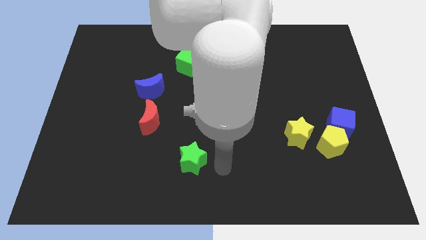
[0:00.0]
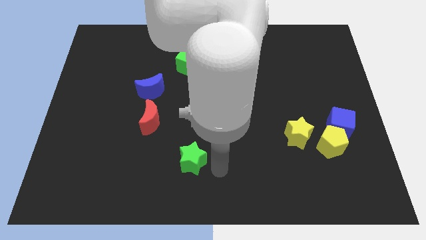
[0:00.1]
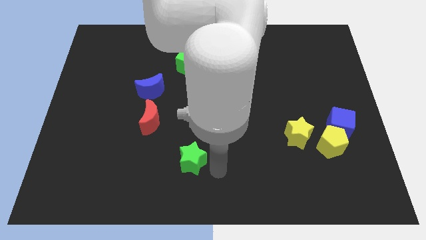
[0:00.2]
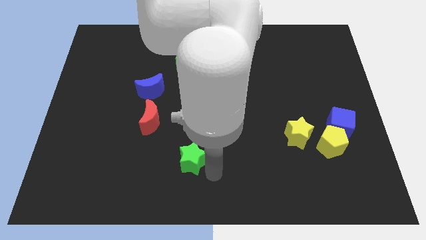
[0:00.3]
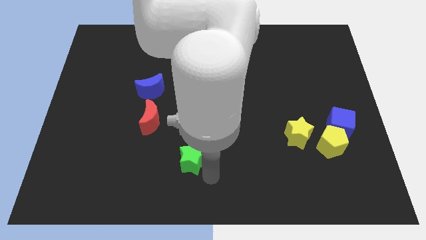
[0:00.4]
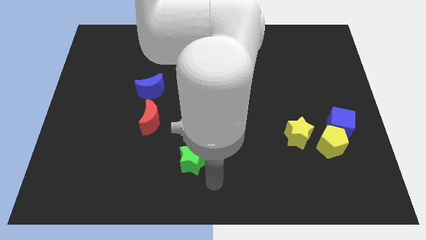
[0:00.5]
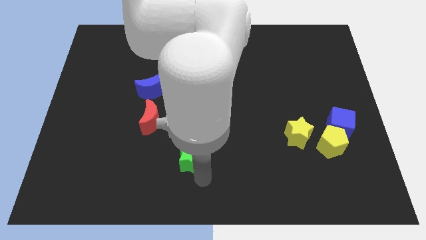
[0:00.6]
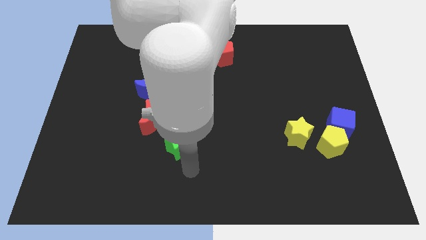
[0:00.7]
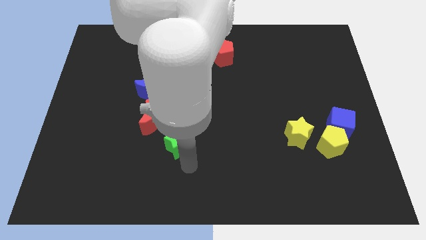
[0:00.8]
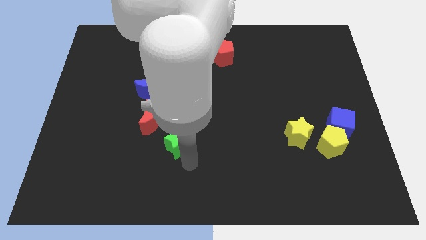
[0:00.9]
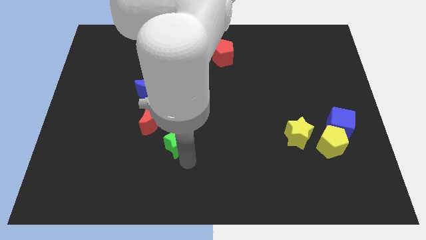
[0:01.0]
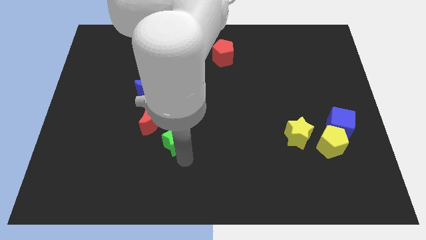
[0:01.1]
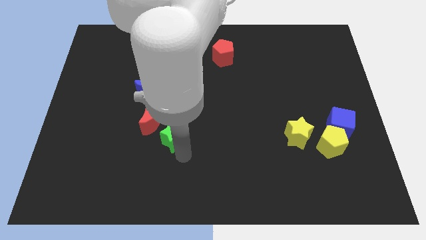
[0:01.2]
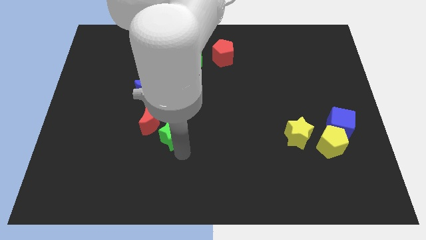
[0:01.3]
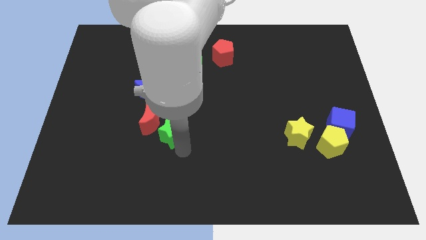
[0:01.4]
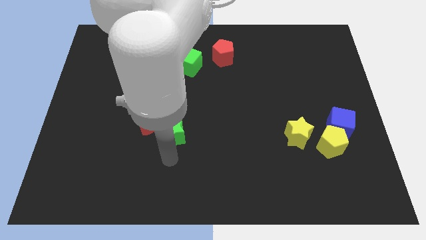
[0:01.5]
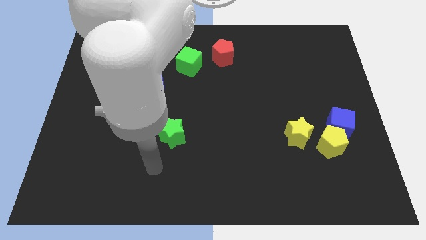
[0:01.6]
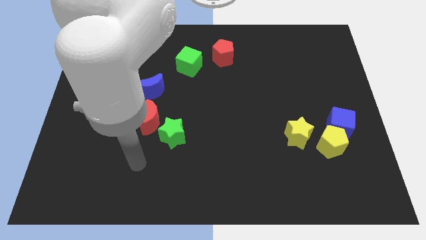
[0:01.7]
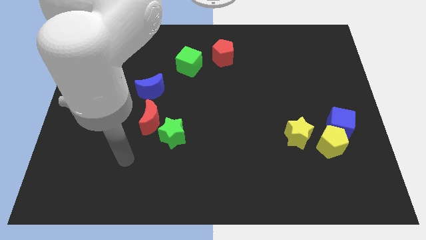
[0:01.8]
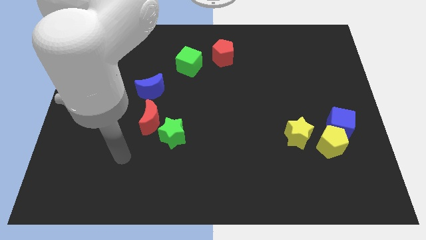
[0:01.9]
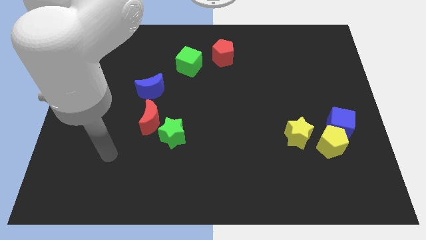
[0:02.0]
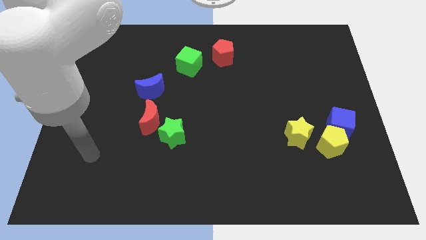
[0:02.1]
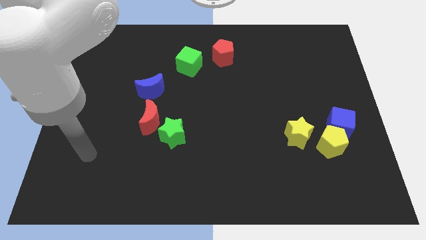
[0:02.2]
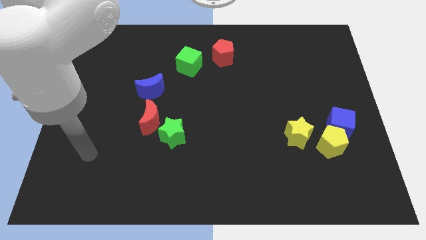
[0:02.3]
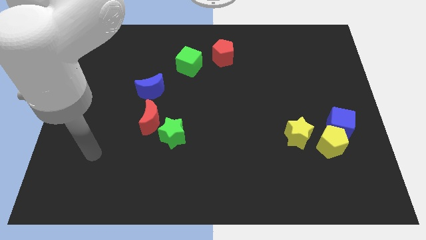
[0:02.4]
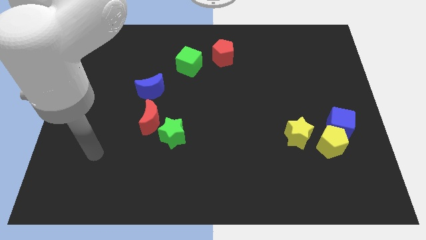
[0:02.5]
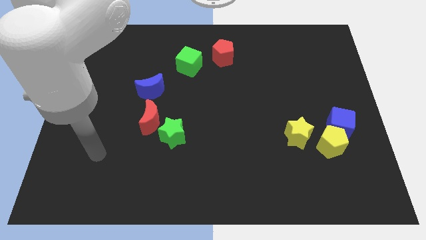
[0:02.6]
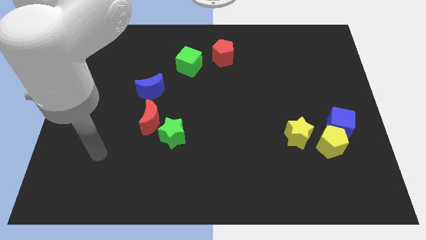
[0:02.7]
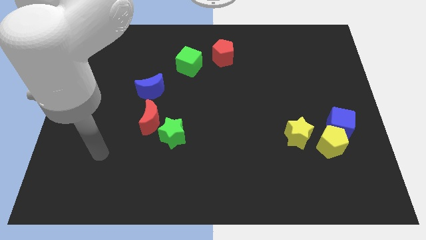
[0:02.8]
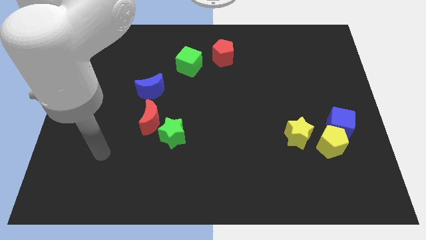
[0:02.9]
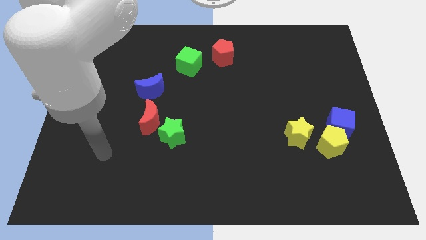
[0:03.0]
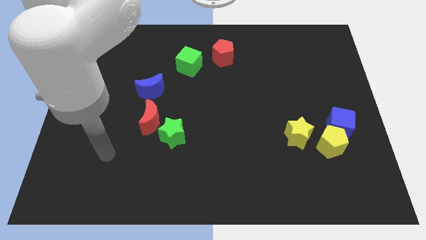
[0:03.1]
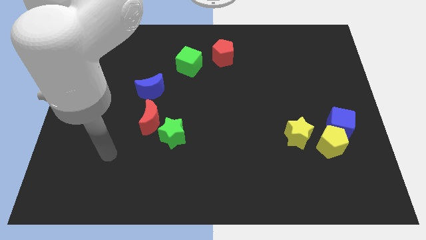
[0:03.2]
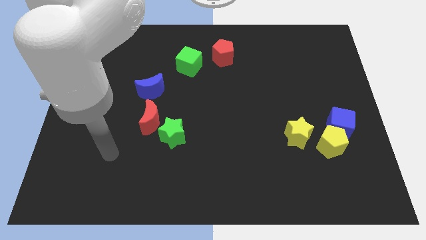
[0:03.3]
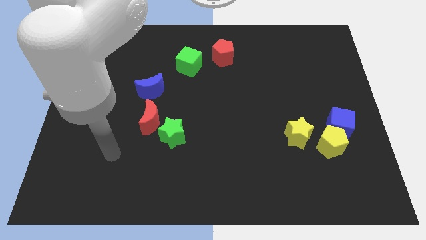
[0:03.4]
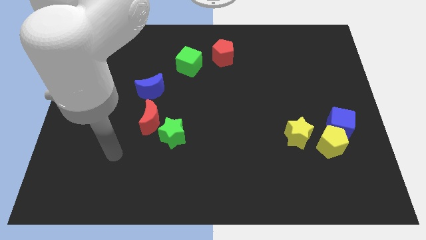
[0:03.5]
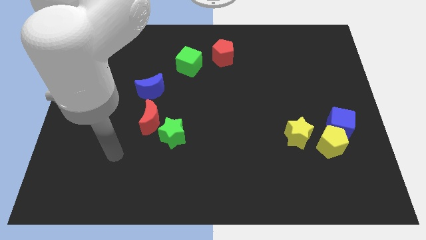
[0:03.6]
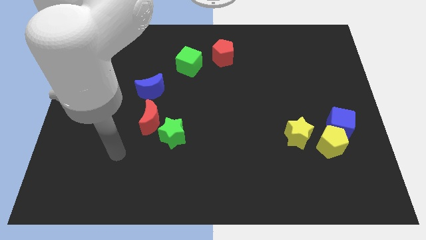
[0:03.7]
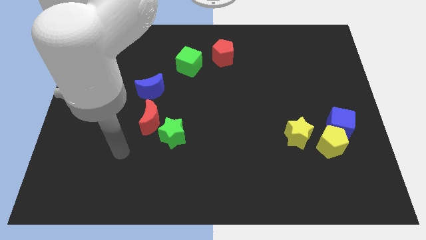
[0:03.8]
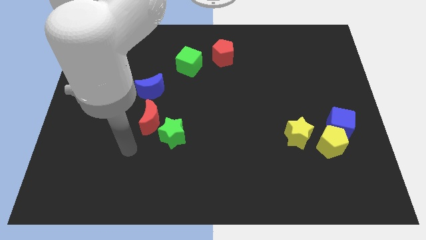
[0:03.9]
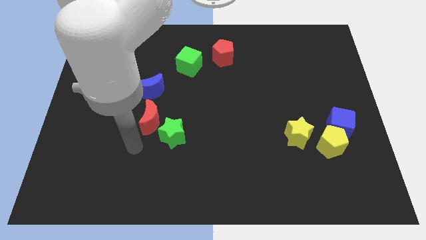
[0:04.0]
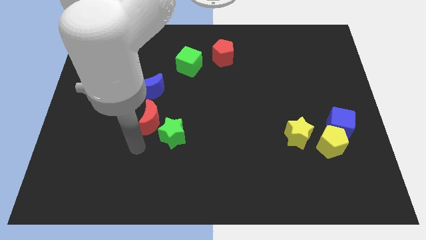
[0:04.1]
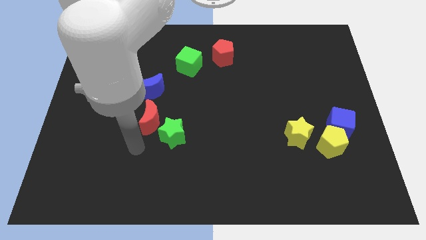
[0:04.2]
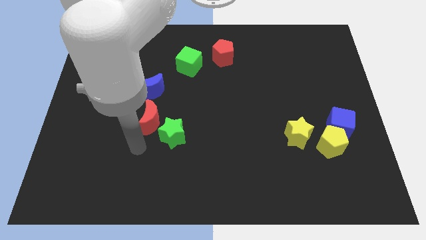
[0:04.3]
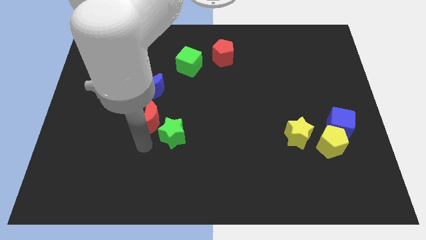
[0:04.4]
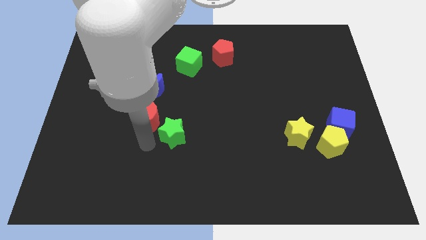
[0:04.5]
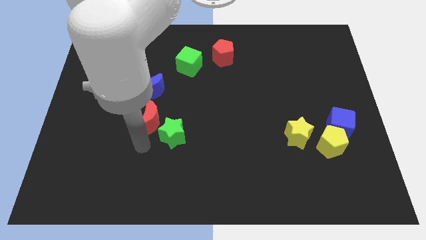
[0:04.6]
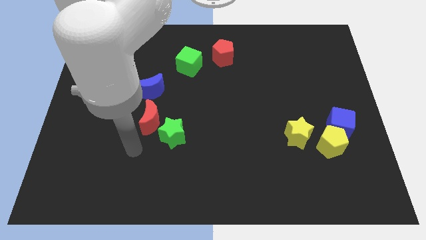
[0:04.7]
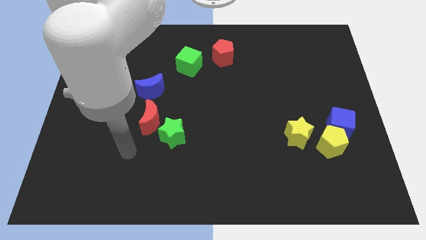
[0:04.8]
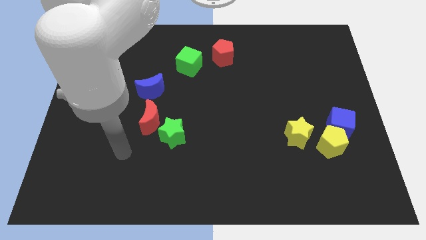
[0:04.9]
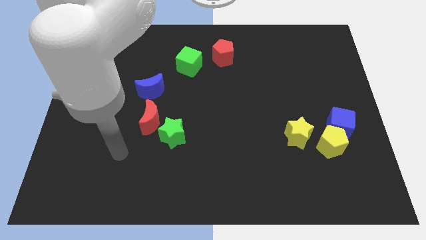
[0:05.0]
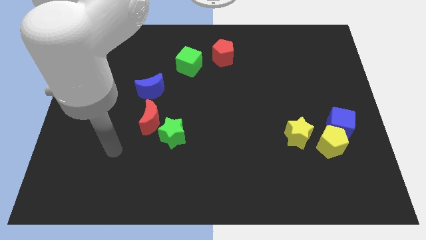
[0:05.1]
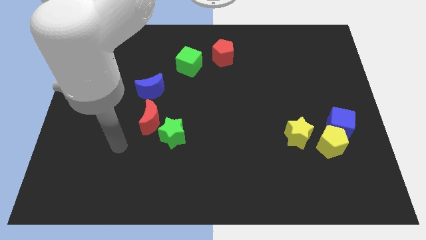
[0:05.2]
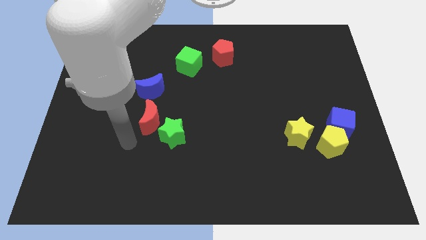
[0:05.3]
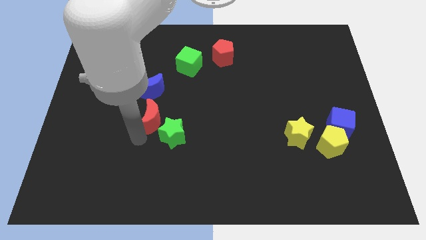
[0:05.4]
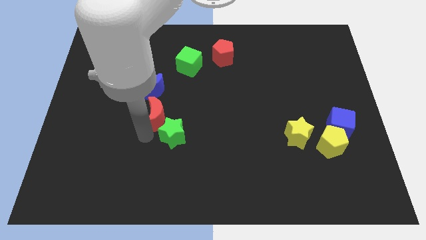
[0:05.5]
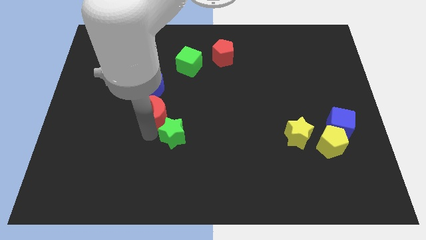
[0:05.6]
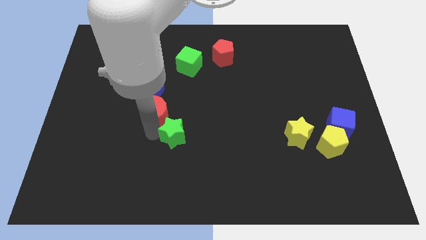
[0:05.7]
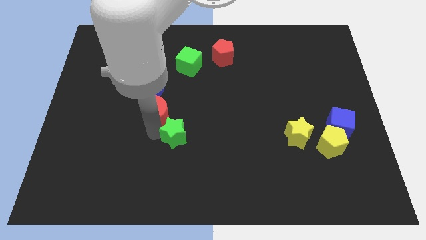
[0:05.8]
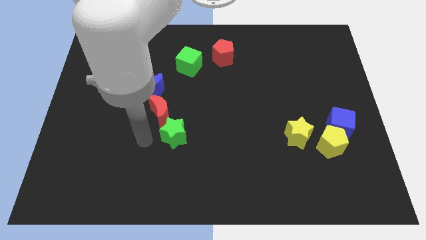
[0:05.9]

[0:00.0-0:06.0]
push the green star and red moon together to form a line

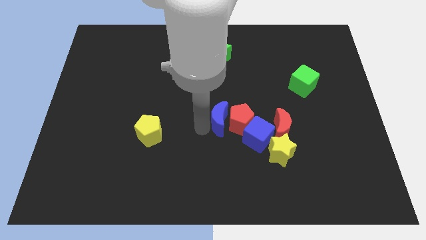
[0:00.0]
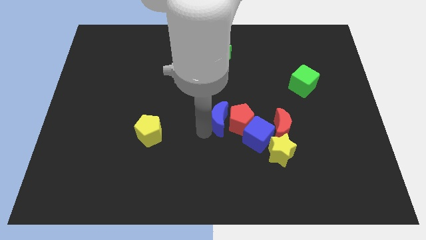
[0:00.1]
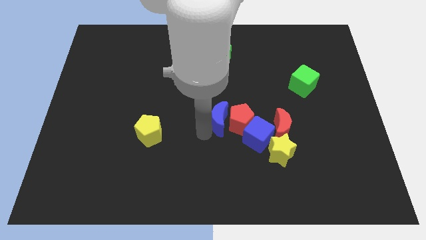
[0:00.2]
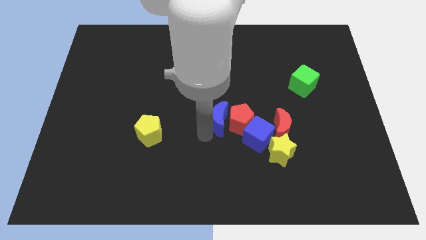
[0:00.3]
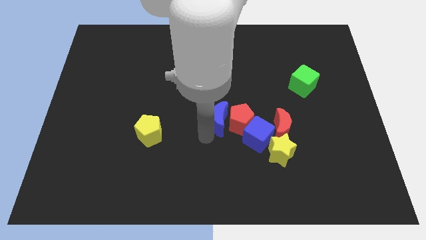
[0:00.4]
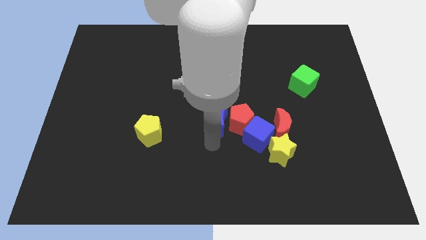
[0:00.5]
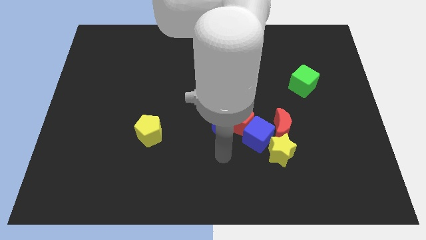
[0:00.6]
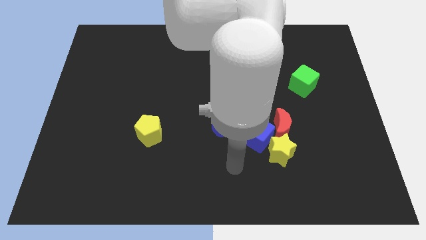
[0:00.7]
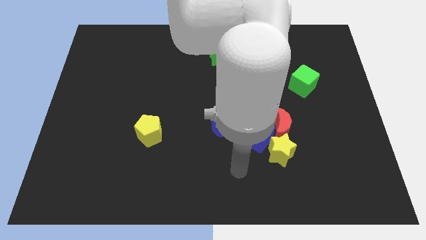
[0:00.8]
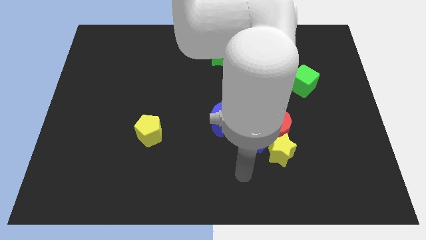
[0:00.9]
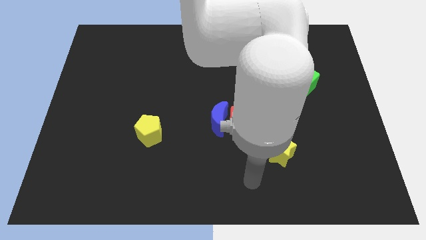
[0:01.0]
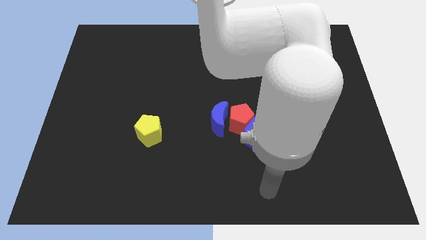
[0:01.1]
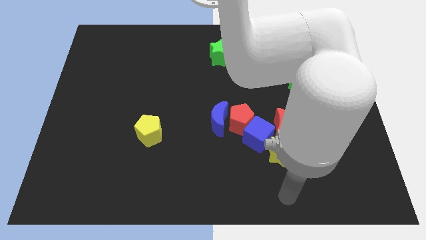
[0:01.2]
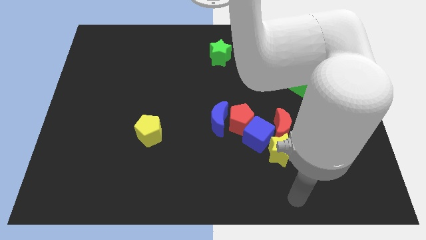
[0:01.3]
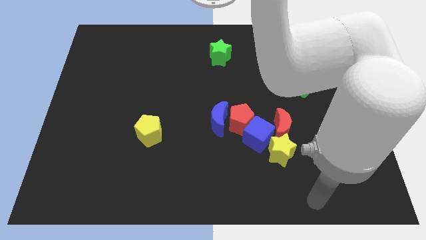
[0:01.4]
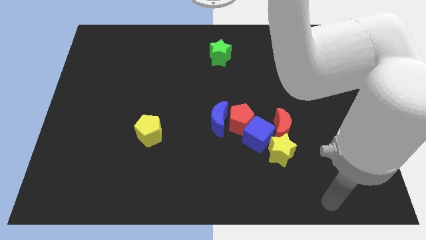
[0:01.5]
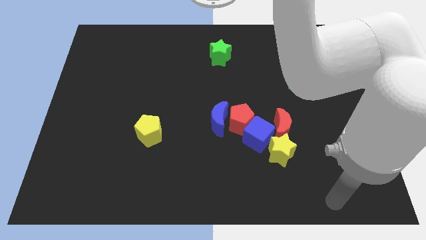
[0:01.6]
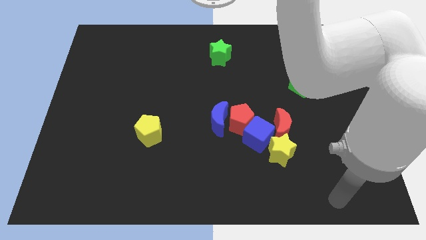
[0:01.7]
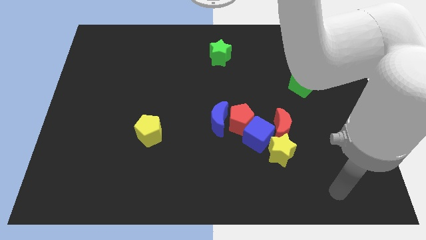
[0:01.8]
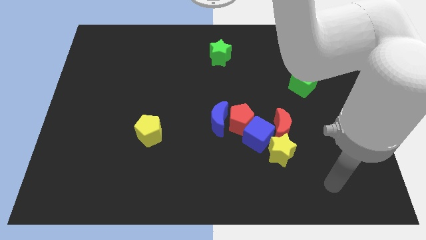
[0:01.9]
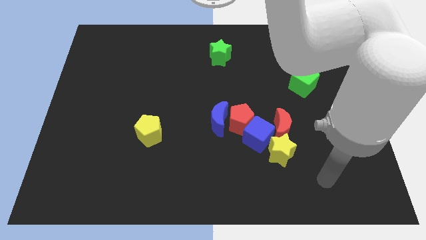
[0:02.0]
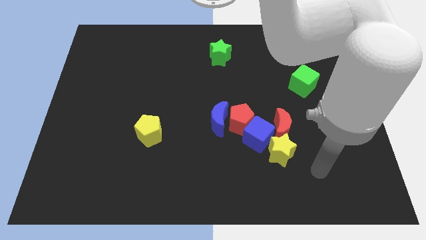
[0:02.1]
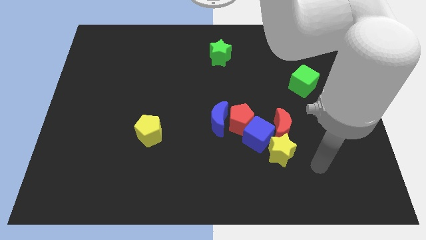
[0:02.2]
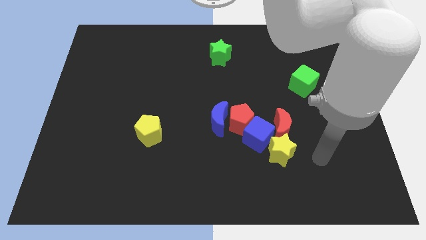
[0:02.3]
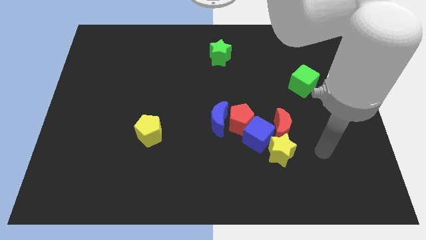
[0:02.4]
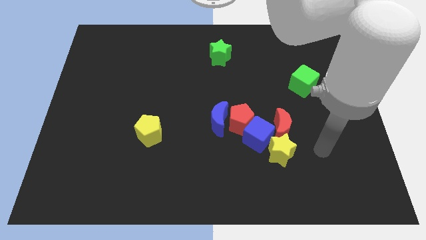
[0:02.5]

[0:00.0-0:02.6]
point your arm to the right of the yellow star

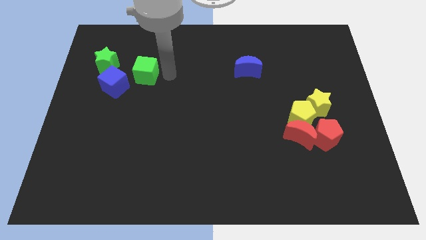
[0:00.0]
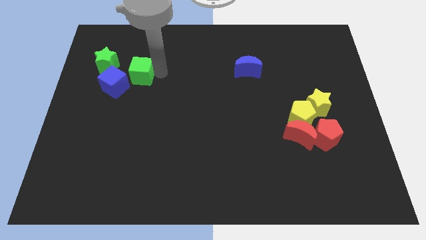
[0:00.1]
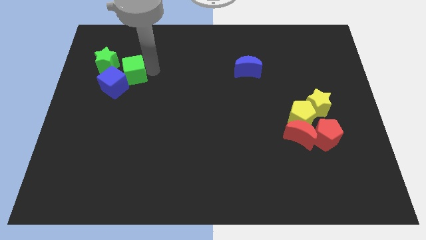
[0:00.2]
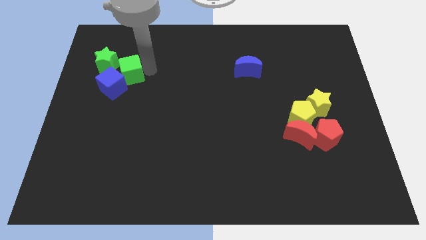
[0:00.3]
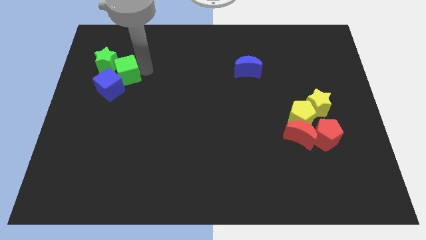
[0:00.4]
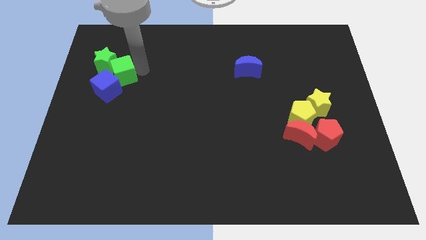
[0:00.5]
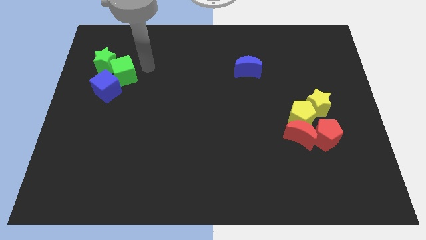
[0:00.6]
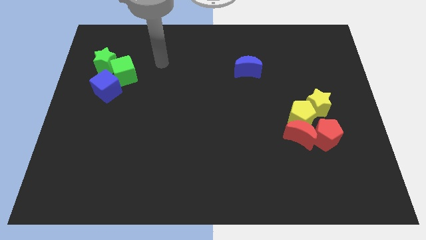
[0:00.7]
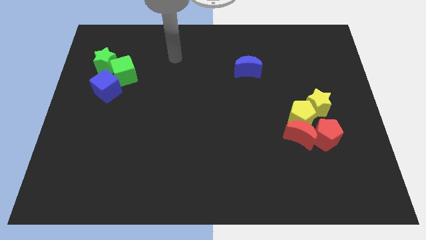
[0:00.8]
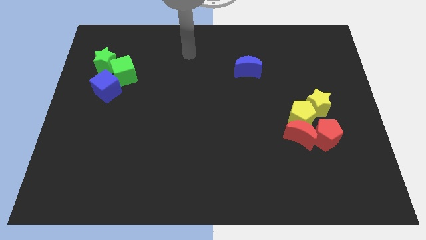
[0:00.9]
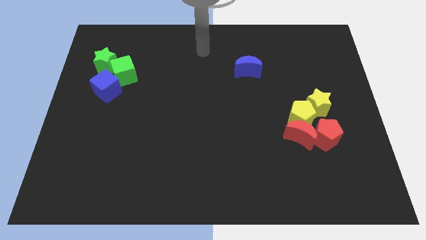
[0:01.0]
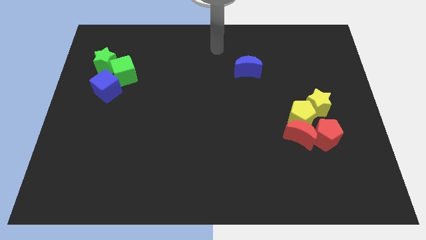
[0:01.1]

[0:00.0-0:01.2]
push the green cube into the green star and blue cube
